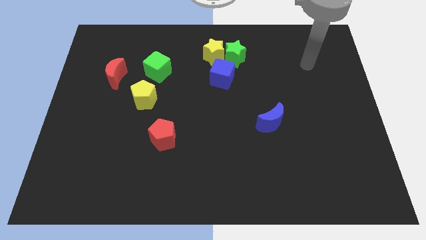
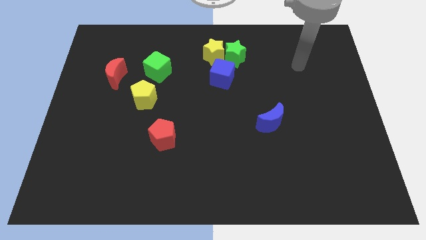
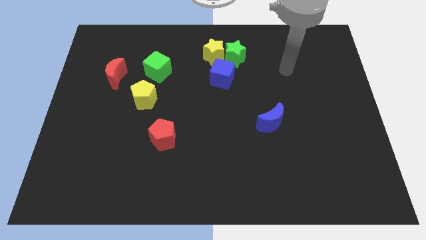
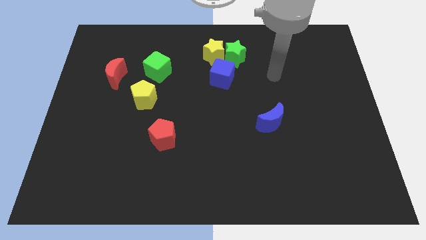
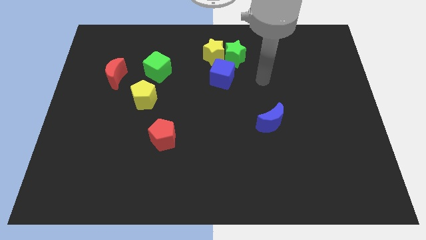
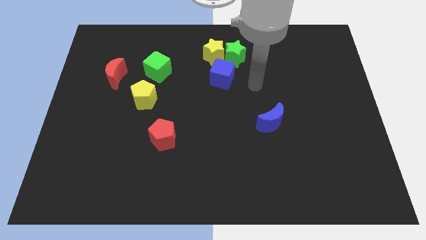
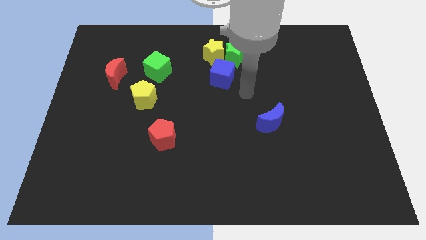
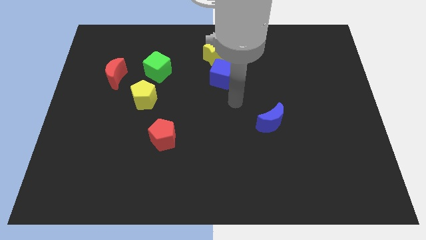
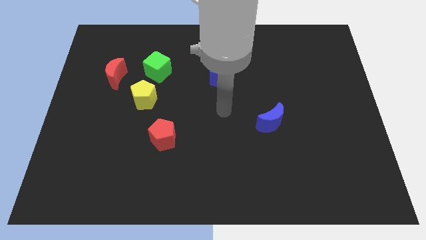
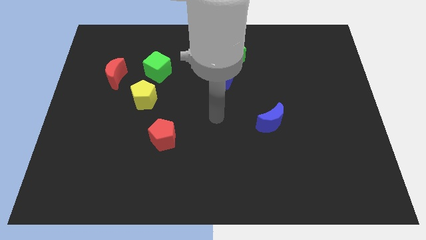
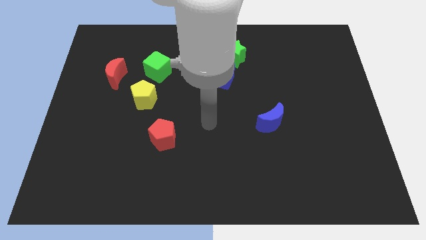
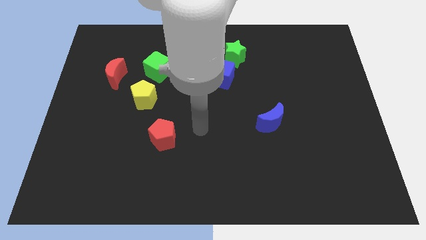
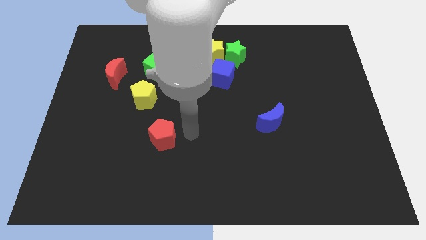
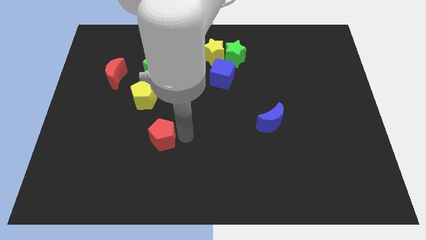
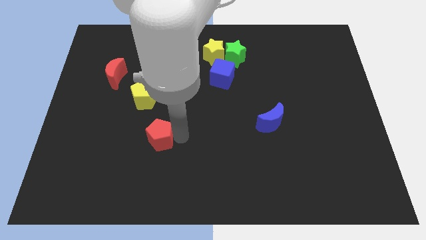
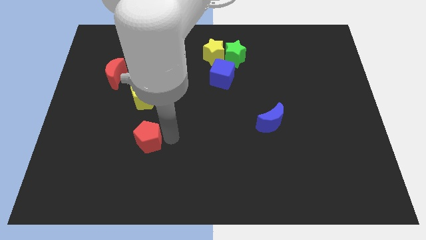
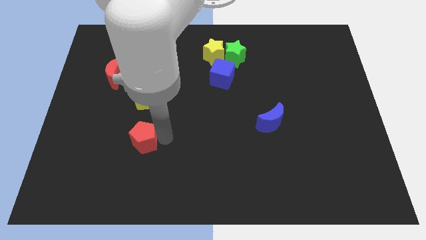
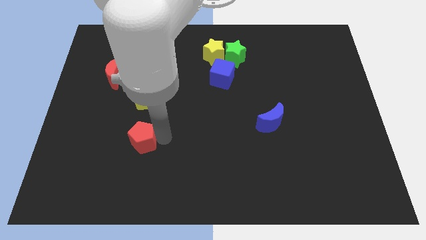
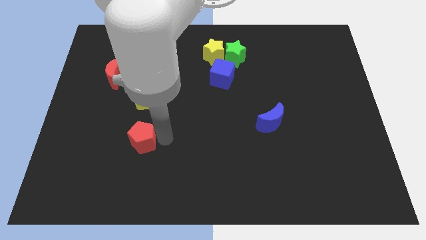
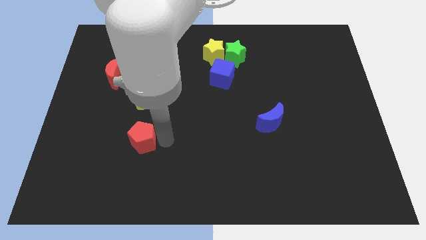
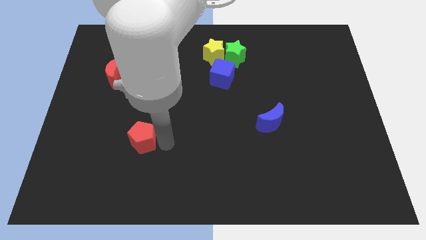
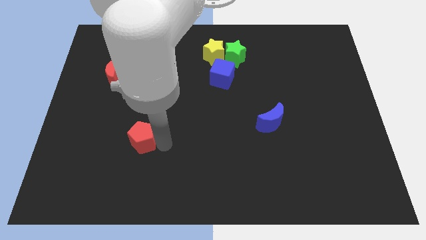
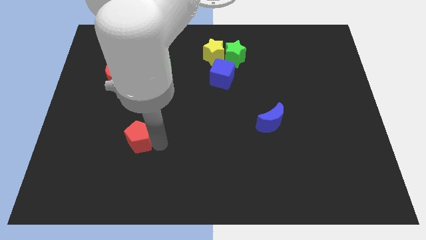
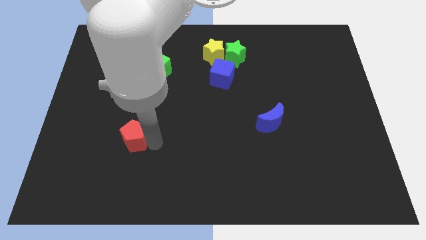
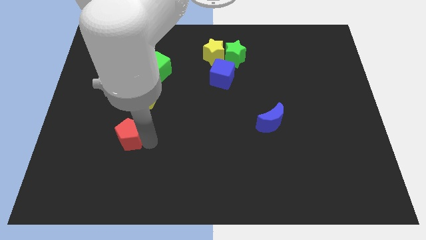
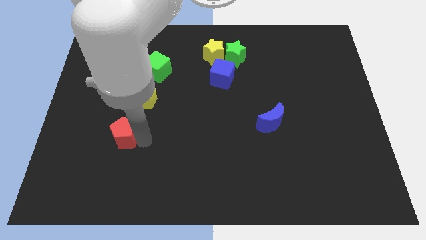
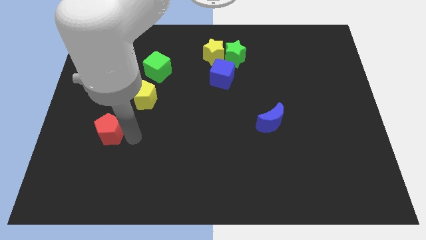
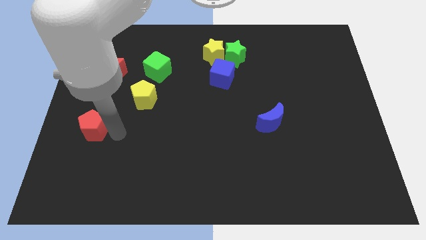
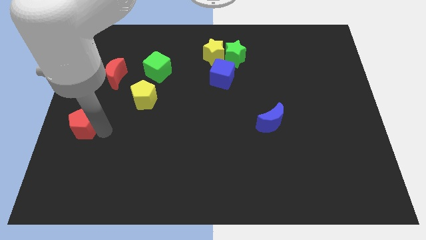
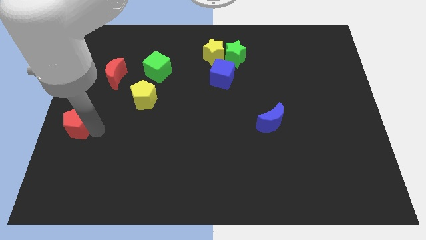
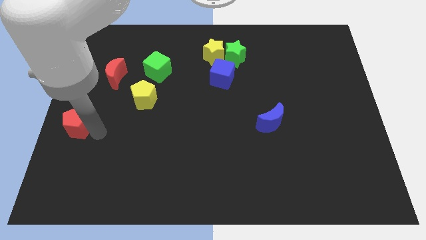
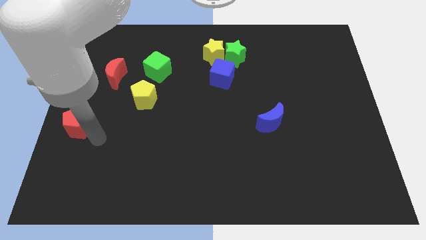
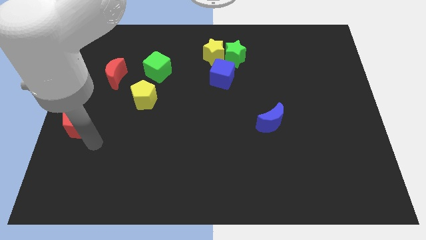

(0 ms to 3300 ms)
place red pentagon to the left center of the board

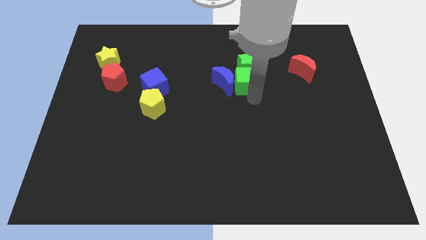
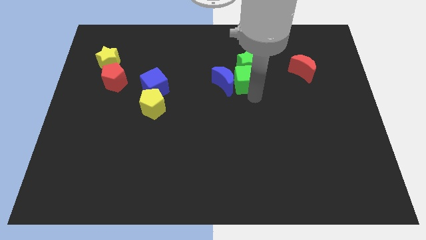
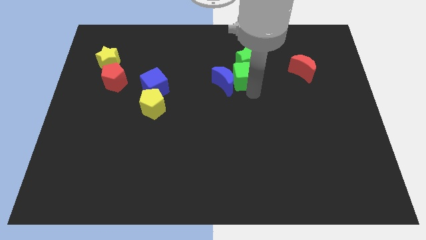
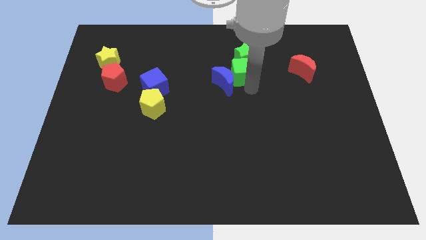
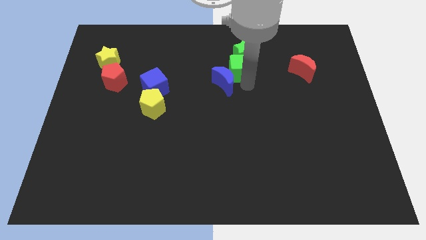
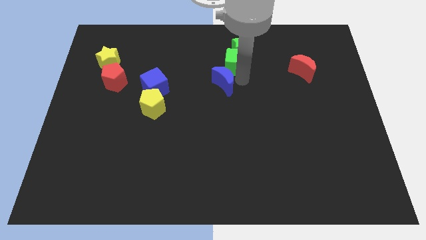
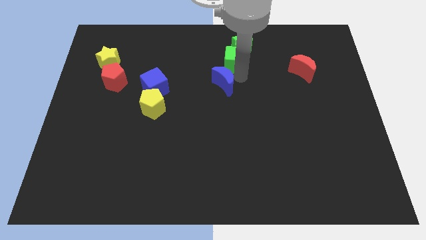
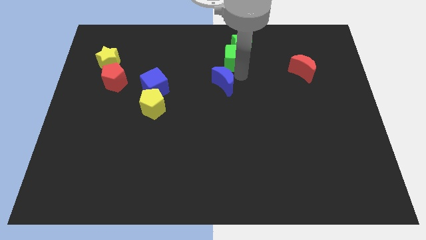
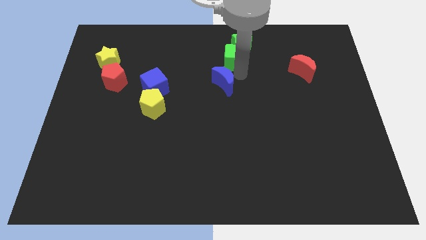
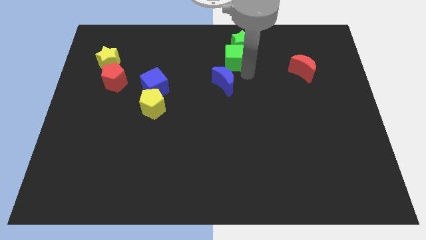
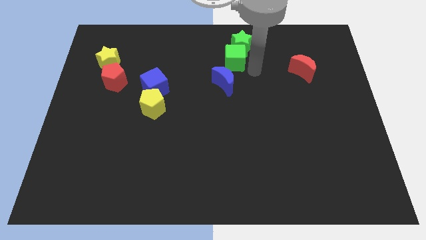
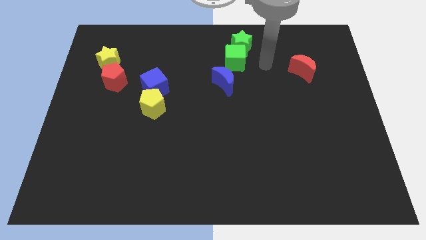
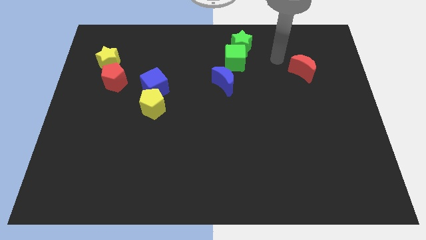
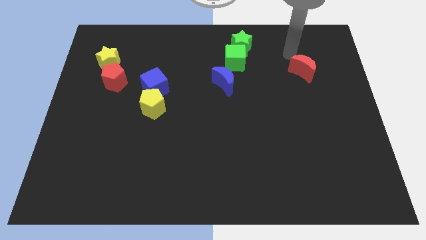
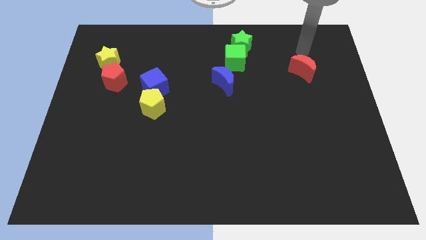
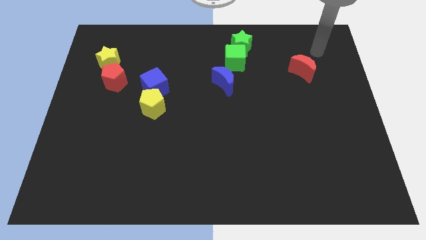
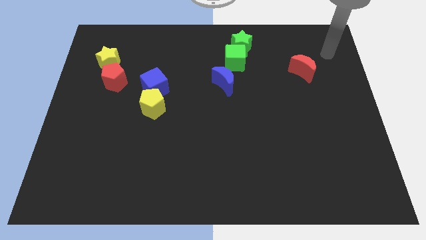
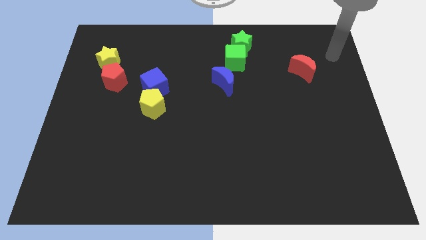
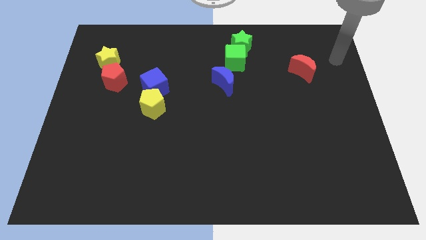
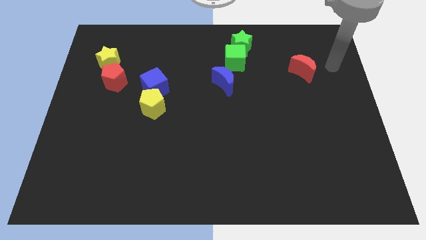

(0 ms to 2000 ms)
push the green block slightly to the top

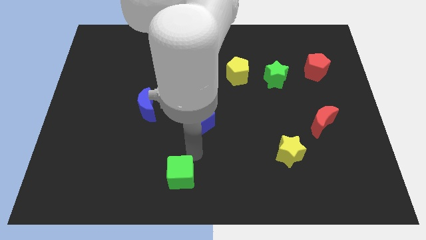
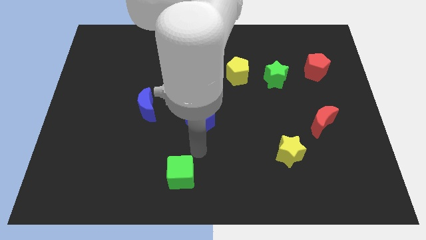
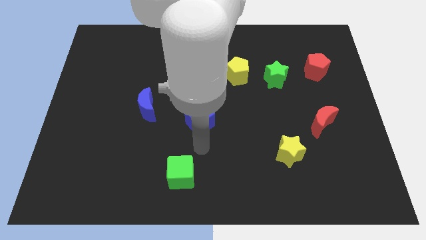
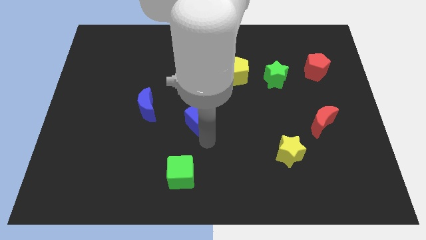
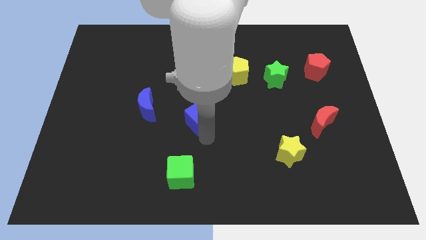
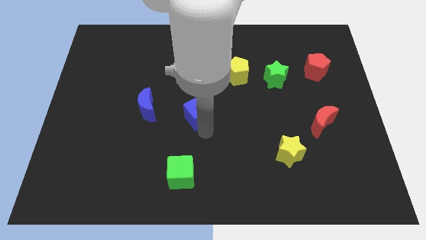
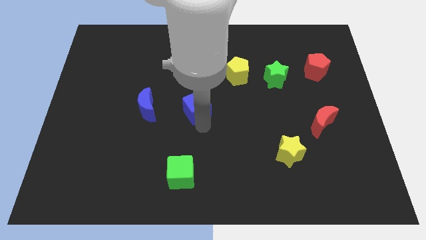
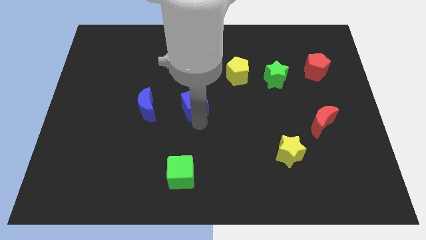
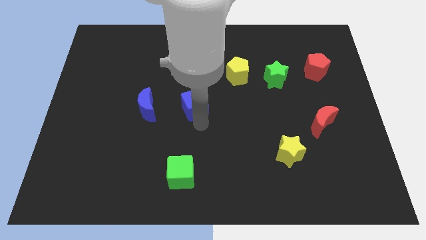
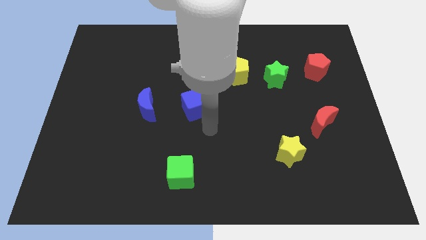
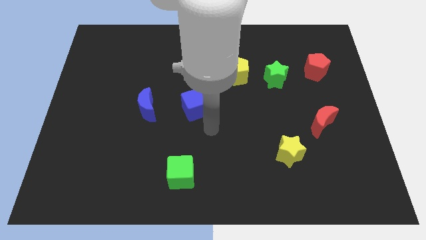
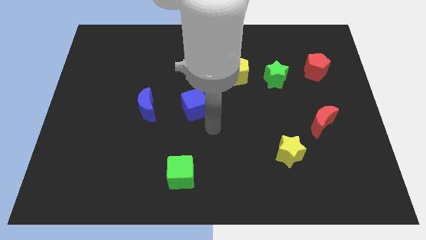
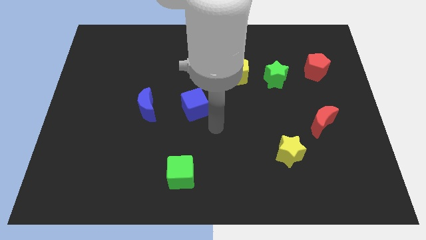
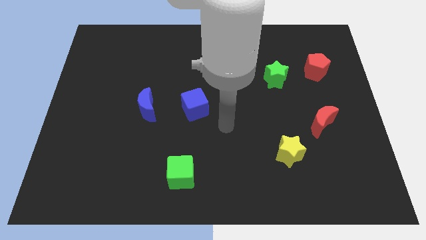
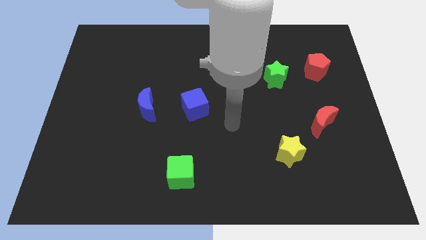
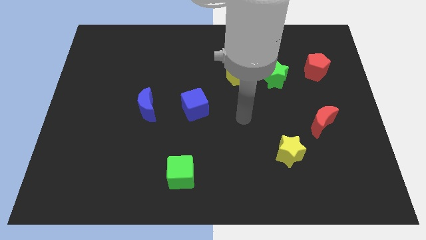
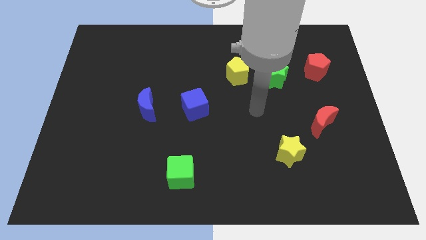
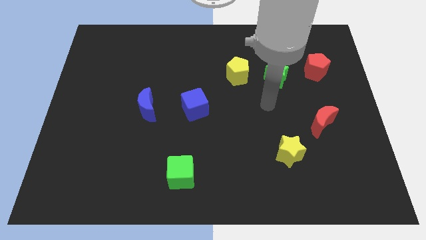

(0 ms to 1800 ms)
place the blue cube right to the blue moon

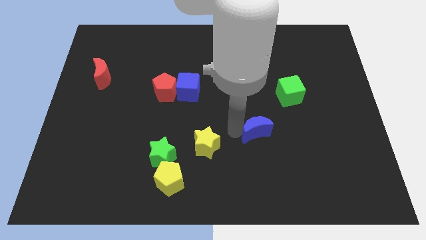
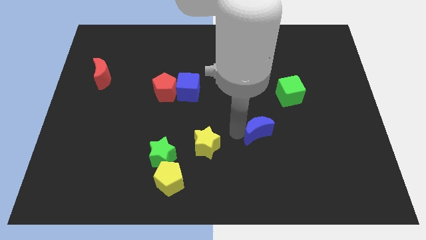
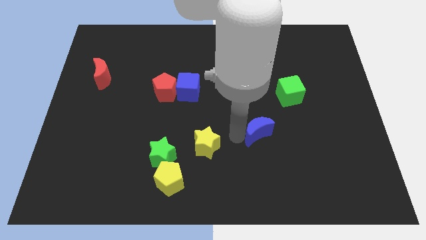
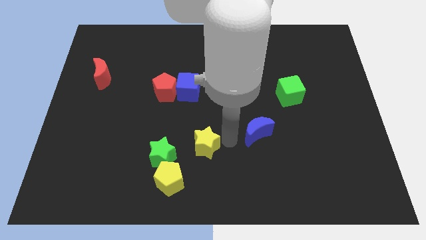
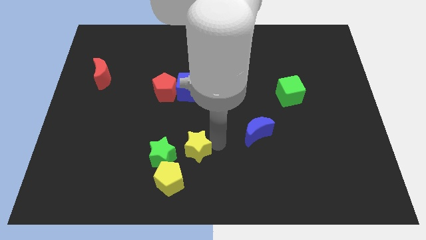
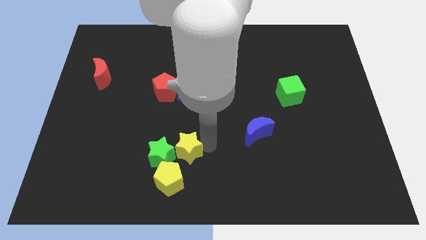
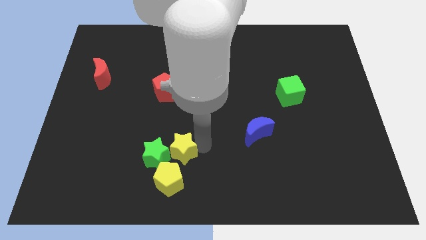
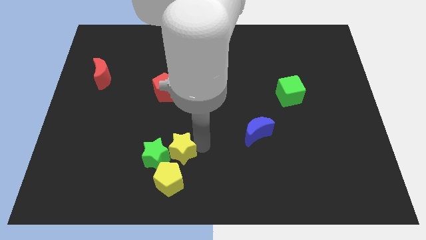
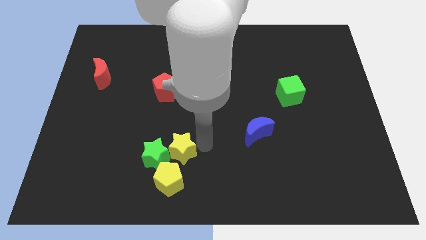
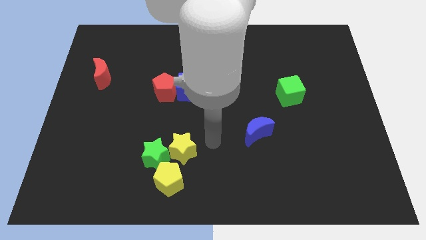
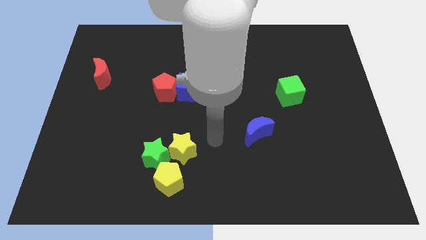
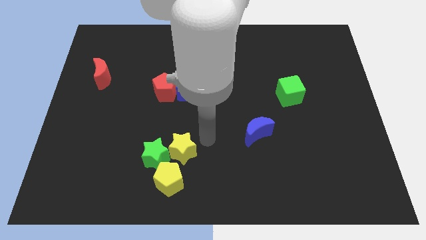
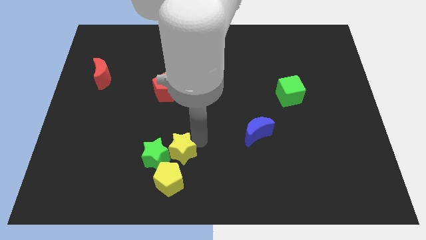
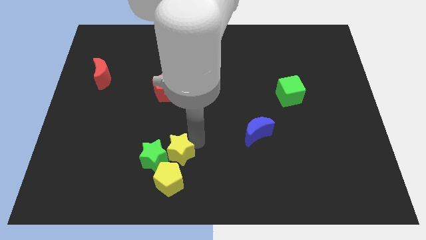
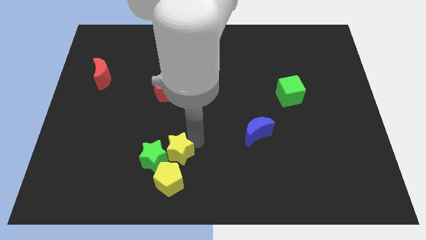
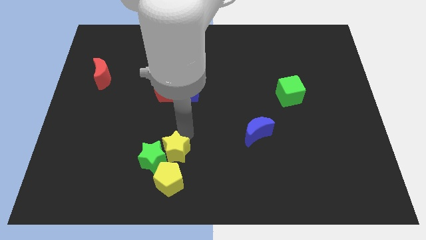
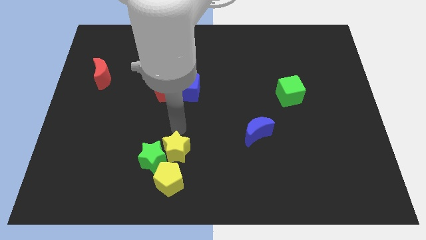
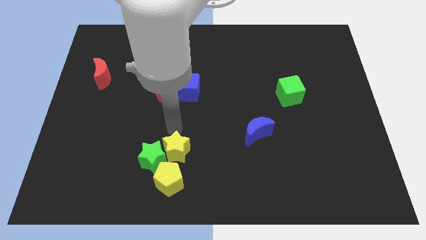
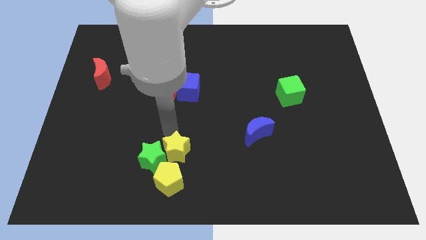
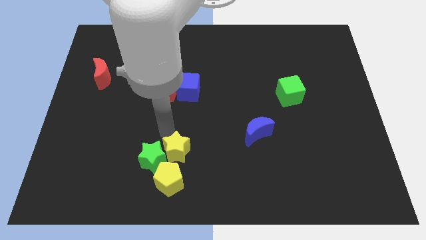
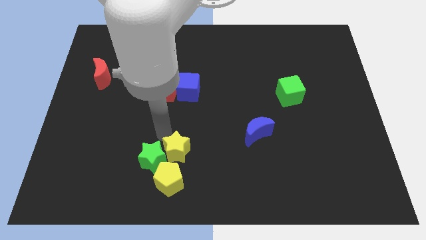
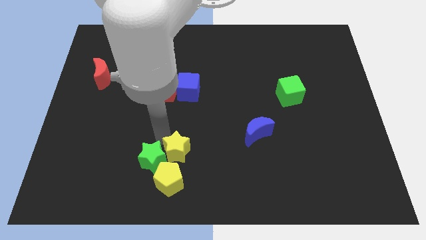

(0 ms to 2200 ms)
place the yellow star above the yellow pentagon
